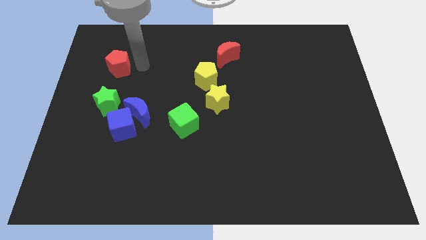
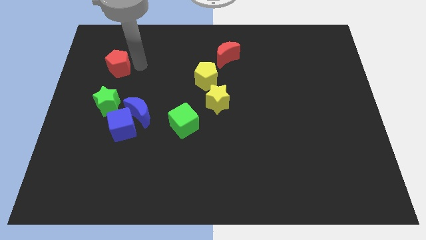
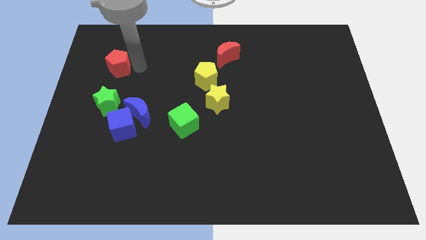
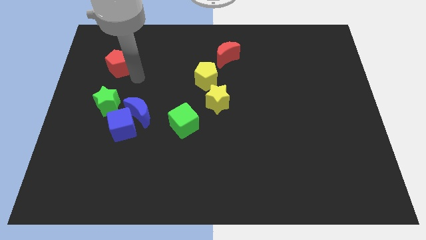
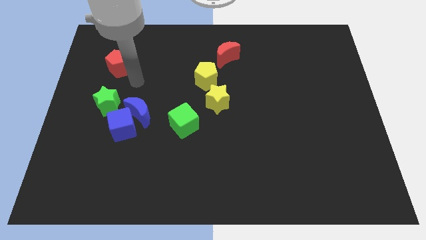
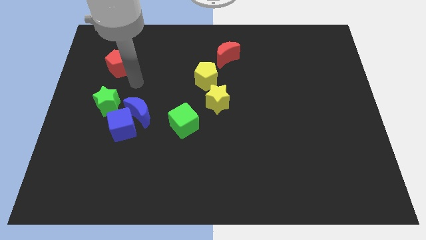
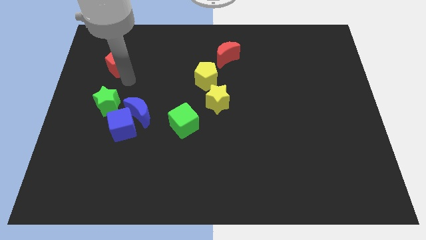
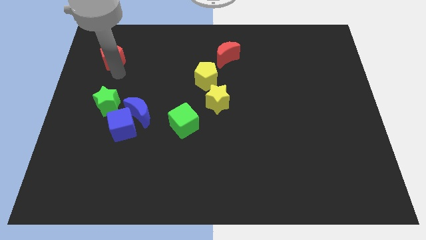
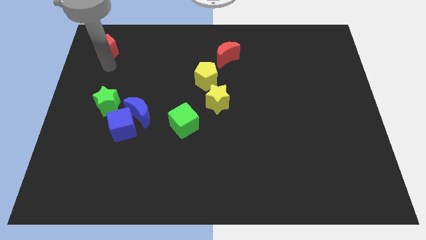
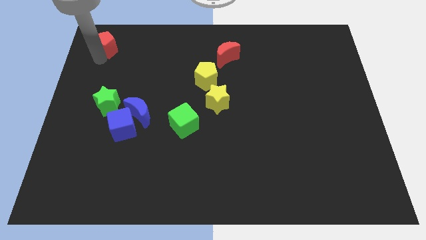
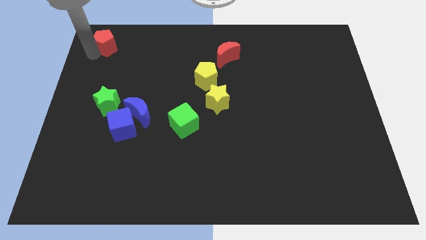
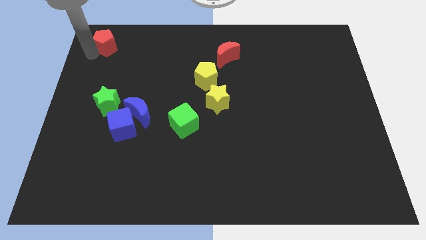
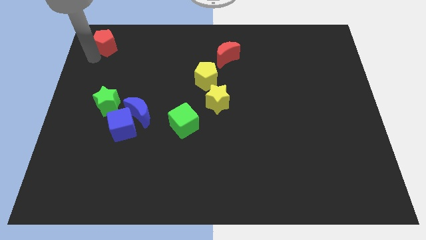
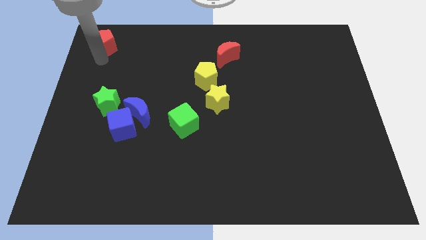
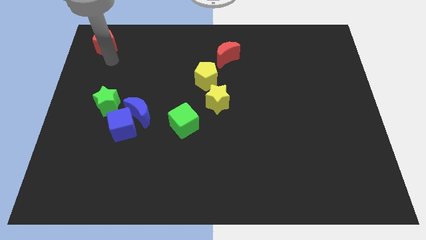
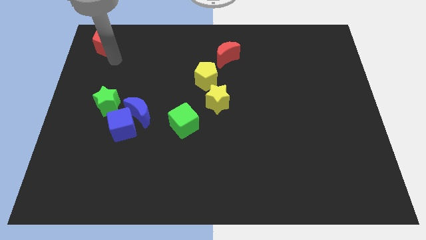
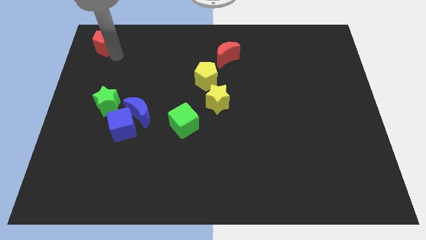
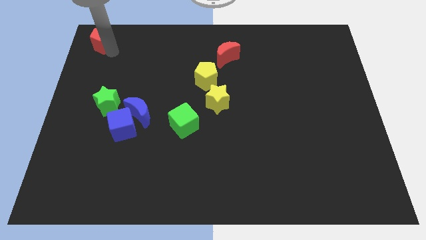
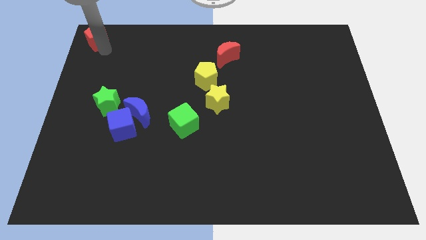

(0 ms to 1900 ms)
place the red pentagon at the top left corner of the board

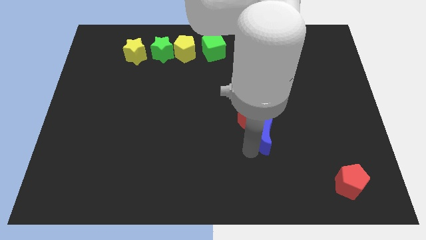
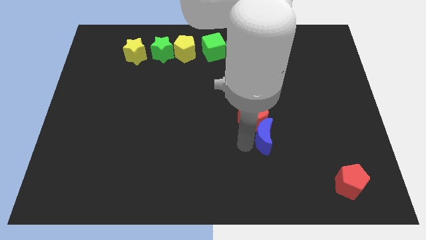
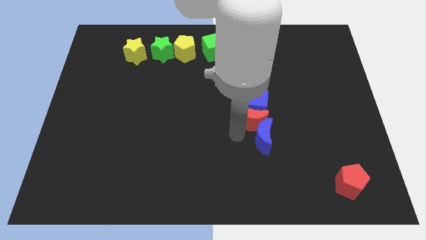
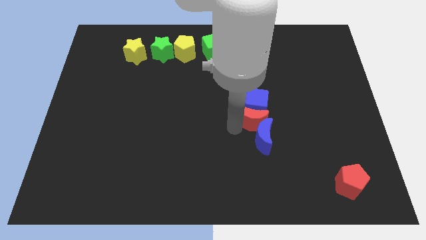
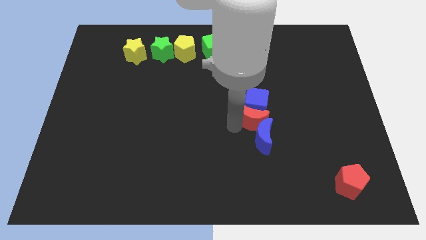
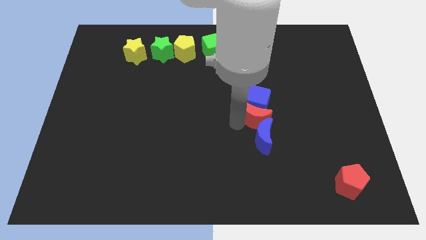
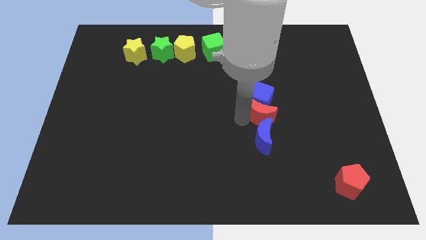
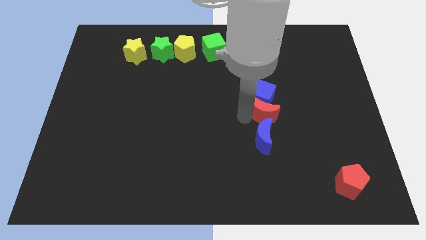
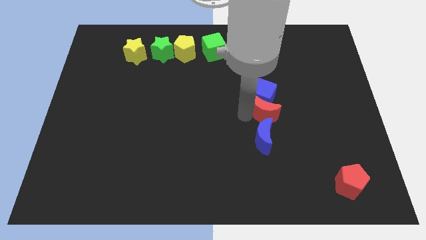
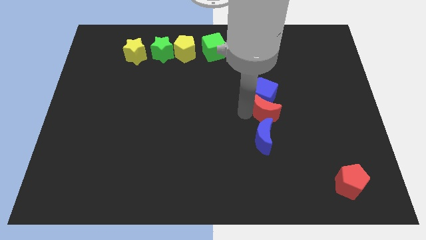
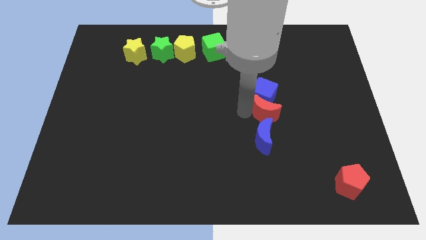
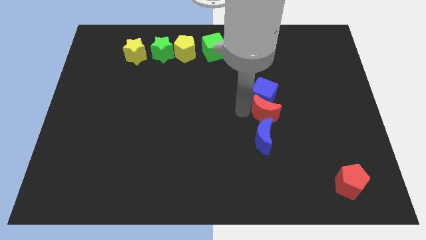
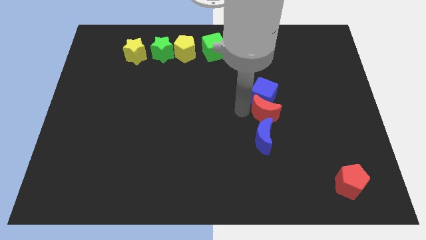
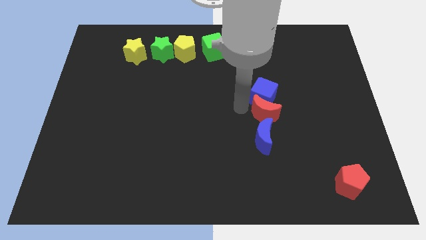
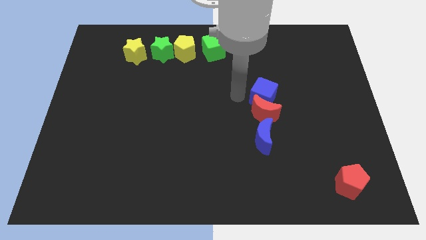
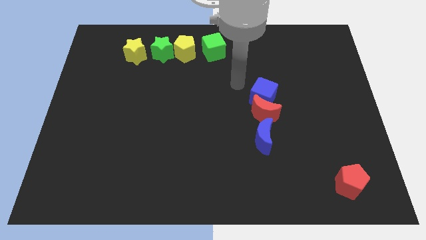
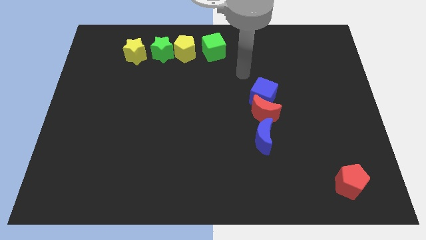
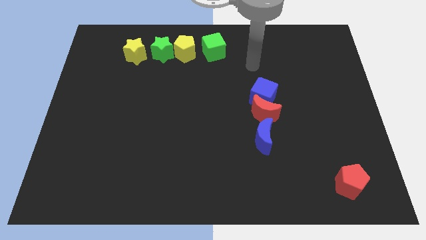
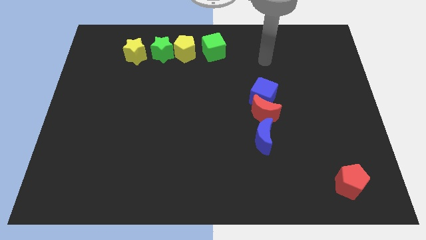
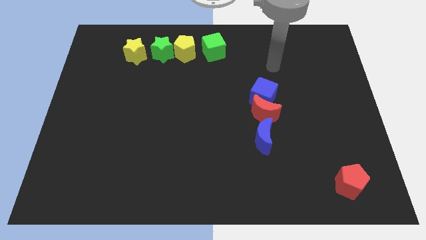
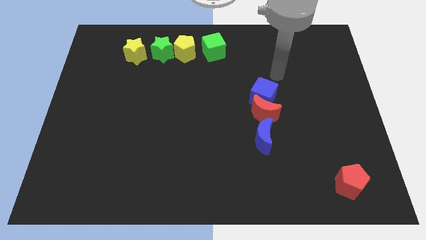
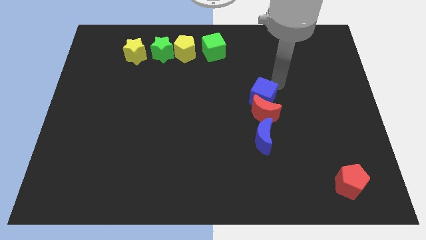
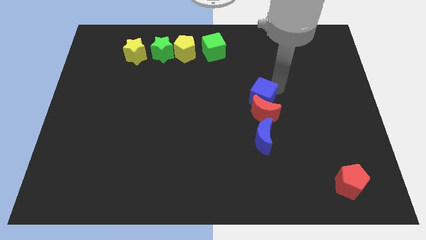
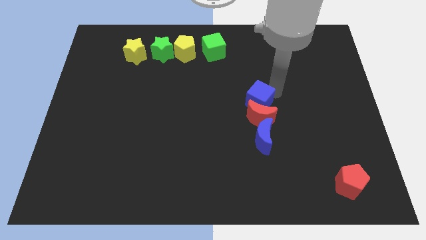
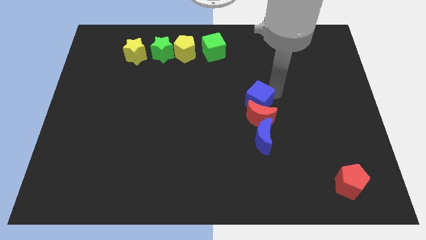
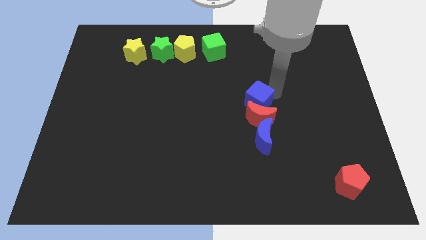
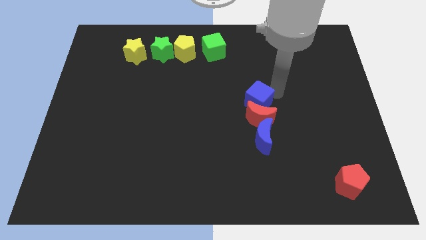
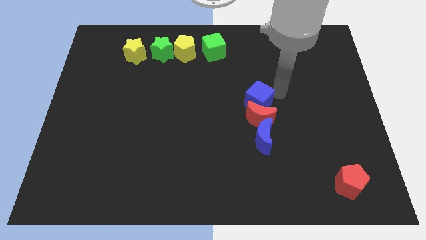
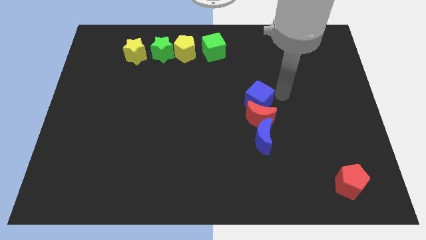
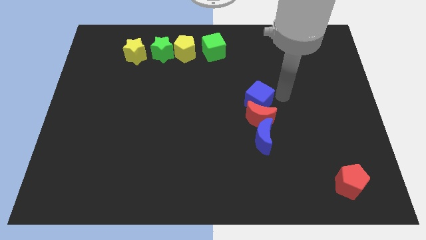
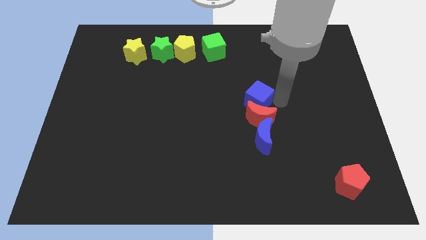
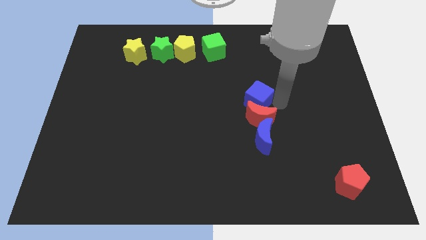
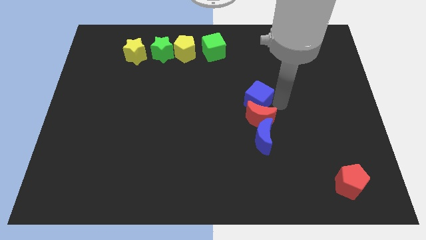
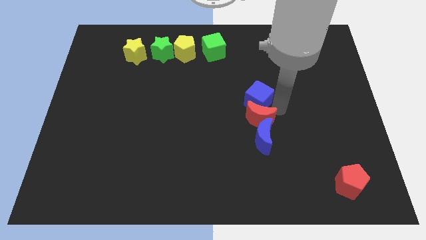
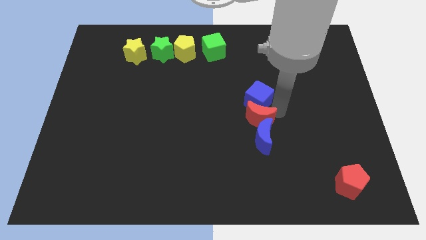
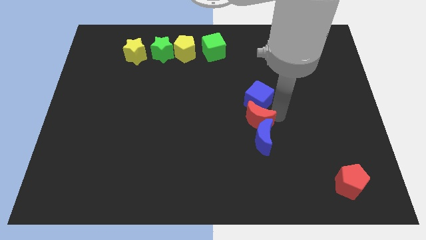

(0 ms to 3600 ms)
adjust the blue cube and the red moon above the blue crescent

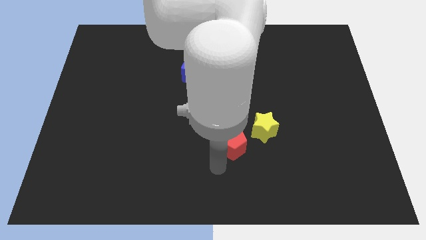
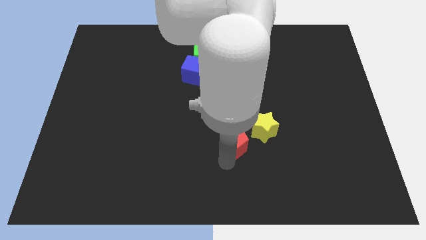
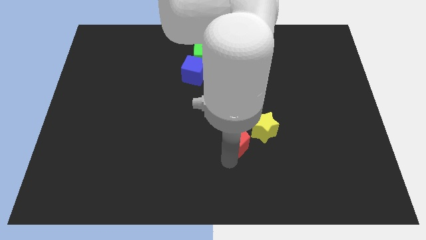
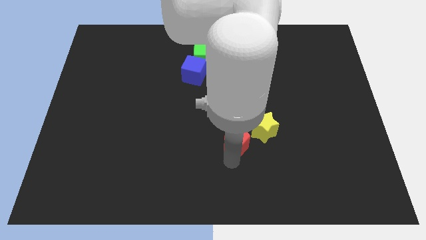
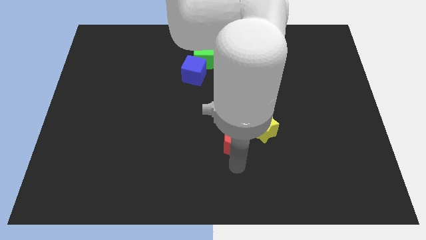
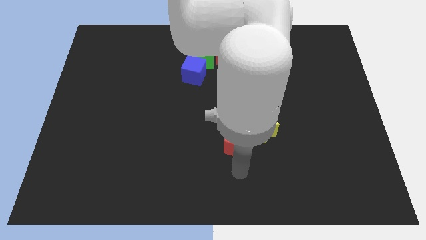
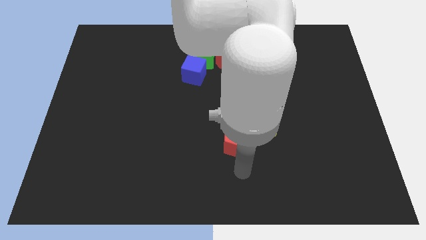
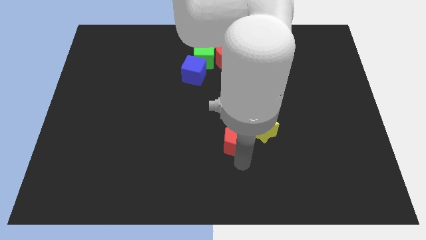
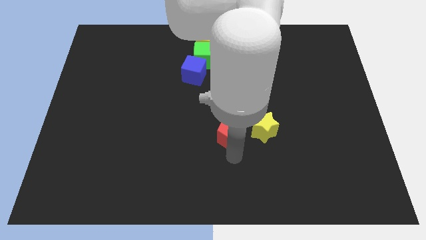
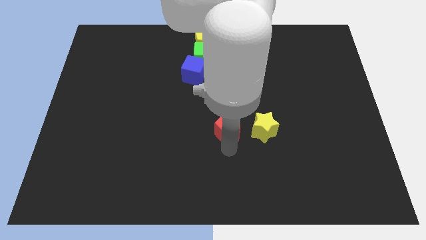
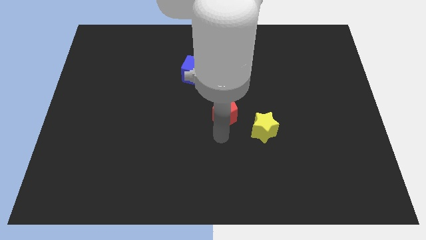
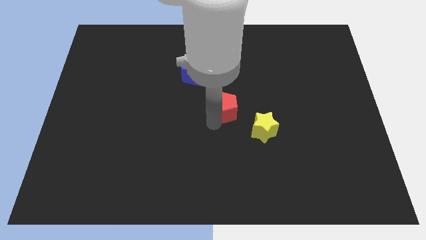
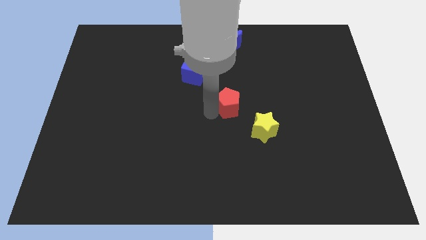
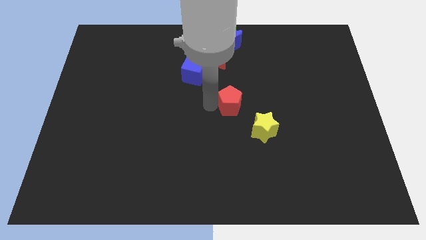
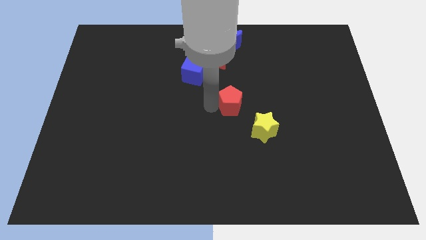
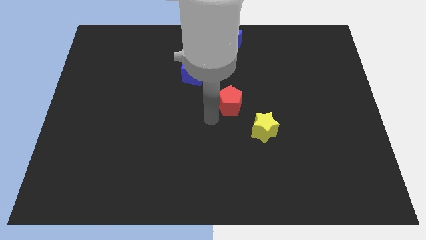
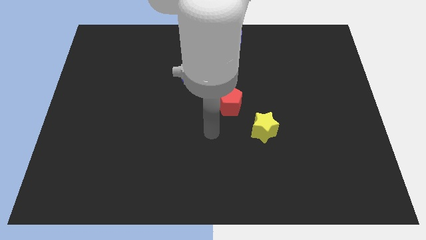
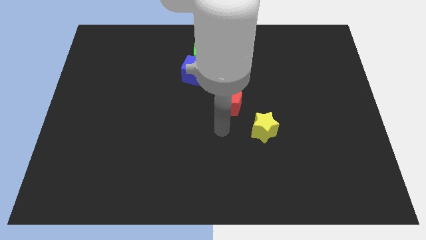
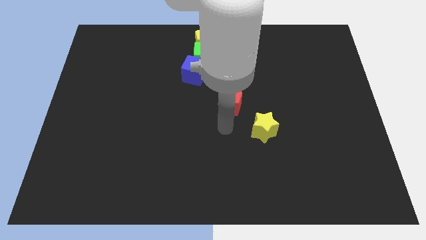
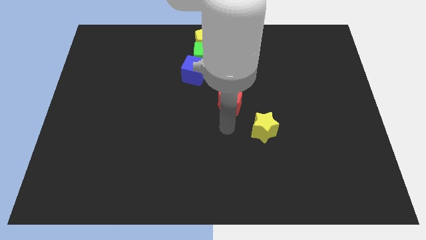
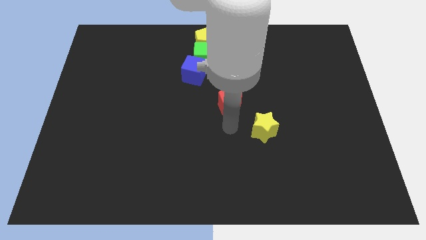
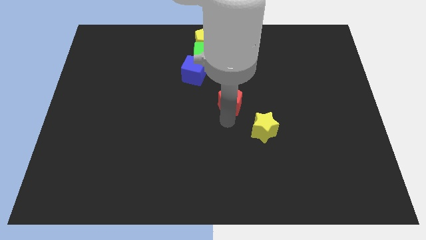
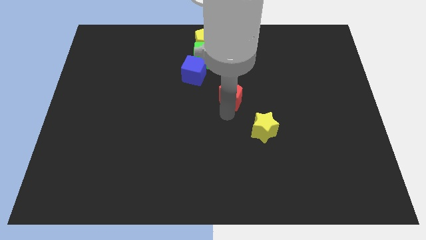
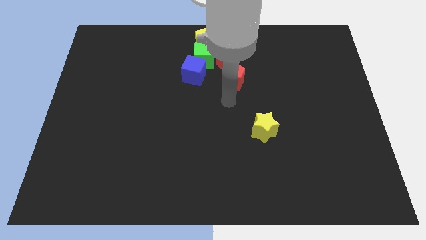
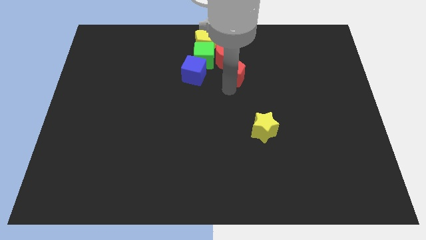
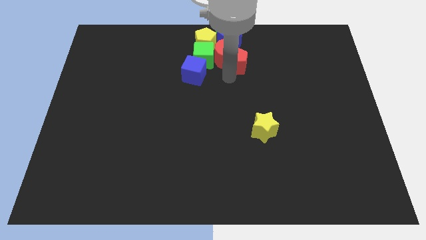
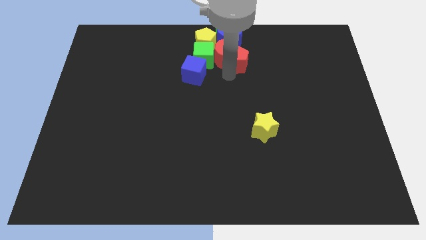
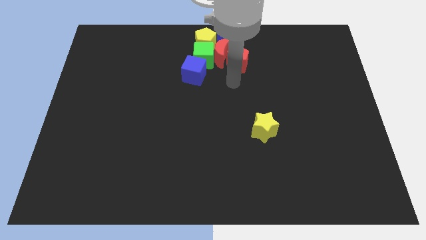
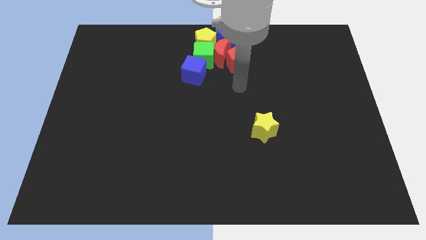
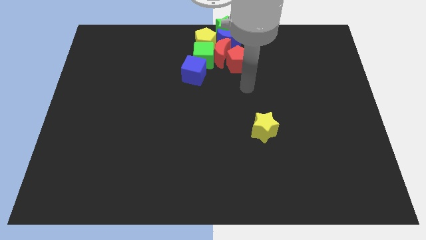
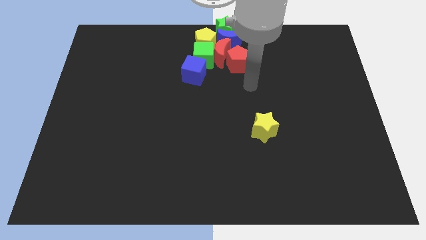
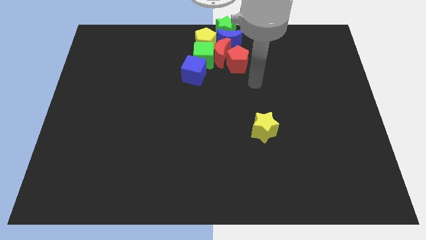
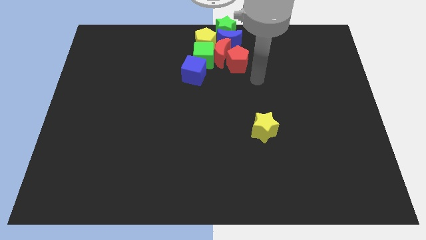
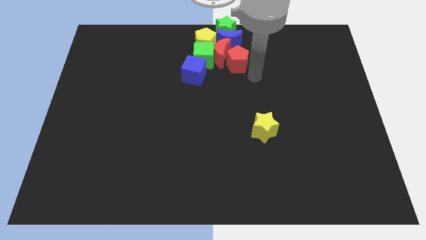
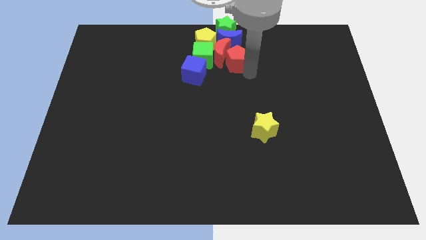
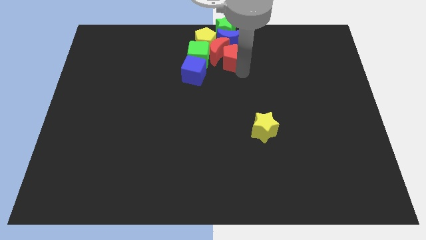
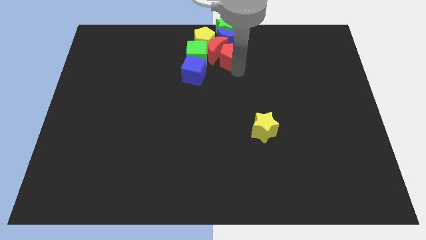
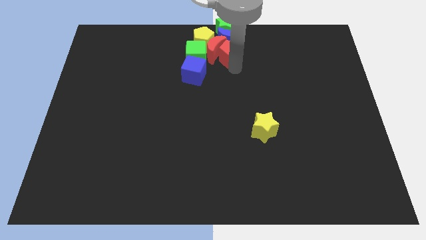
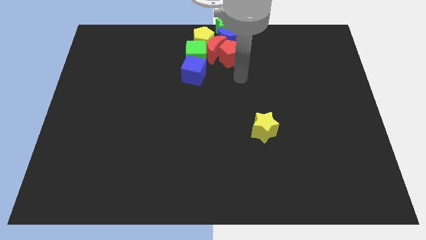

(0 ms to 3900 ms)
drag the red pentagon into the red moon
